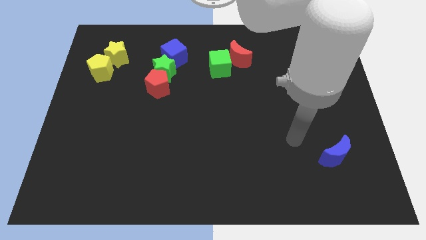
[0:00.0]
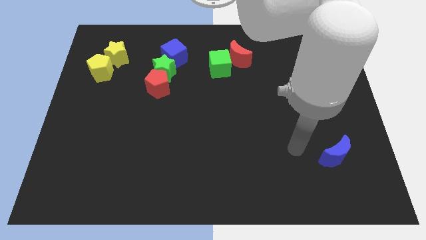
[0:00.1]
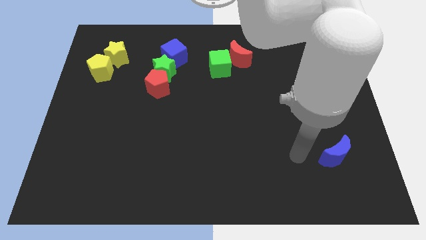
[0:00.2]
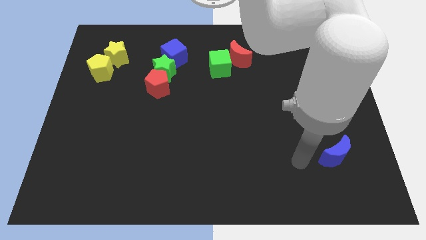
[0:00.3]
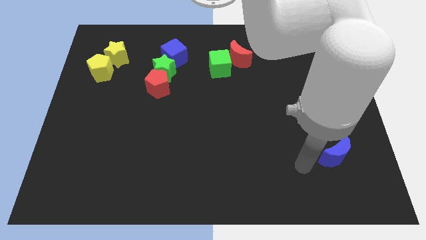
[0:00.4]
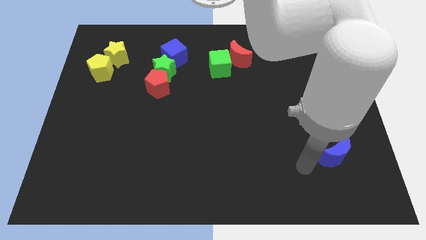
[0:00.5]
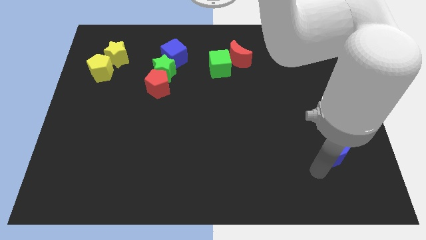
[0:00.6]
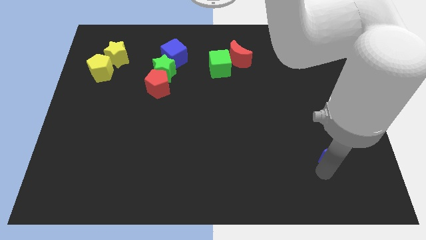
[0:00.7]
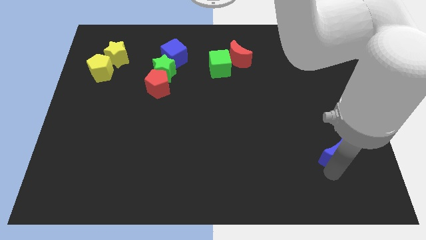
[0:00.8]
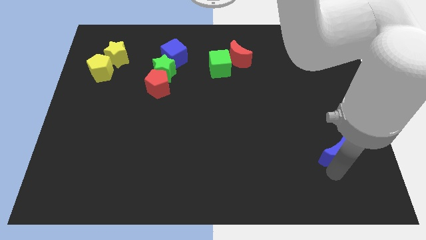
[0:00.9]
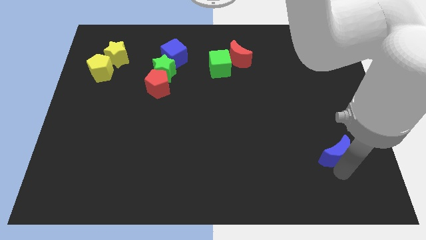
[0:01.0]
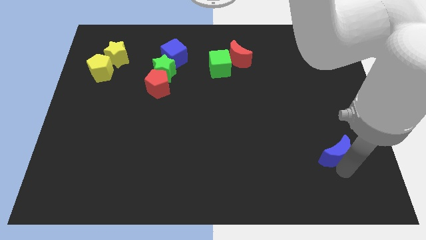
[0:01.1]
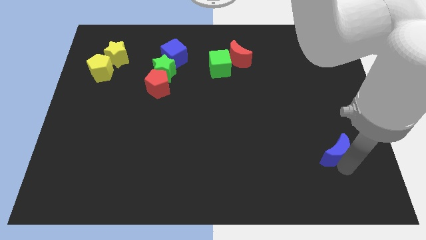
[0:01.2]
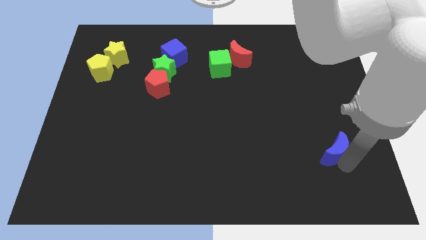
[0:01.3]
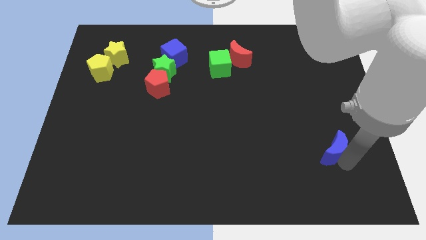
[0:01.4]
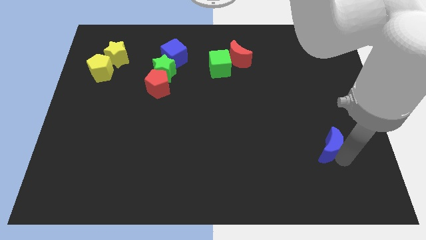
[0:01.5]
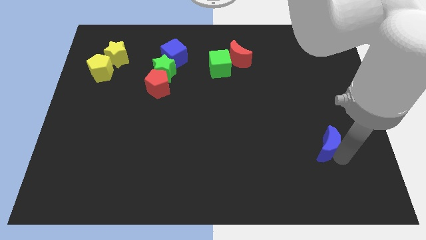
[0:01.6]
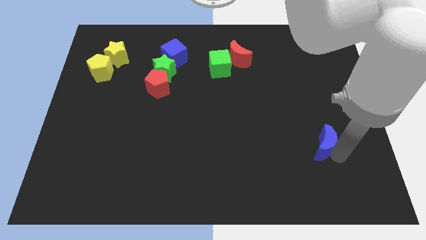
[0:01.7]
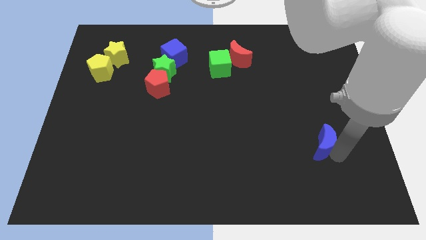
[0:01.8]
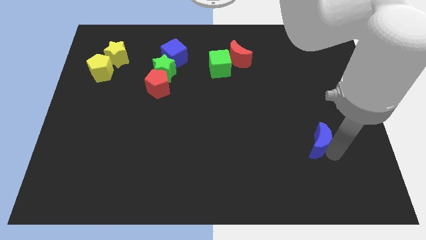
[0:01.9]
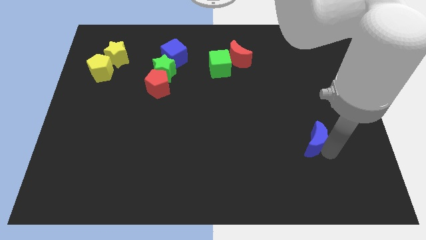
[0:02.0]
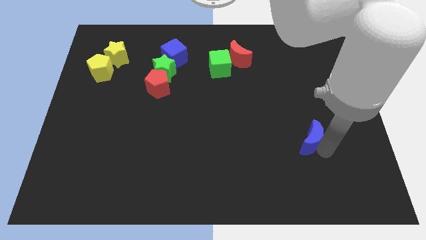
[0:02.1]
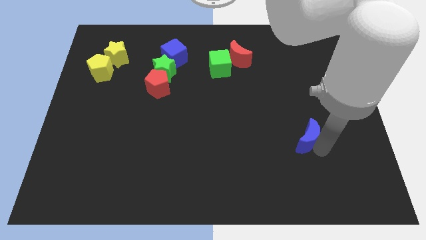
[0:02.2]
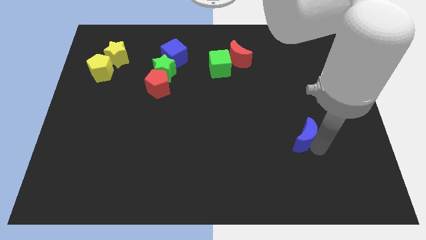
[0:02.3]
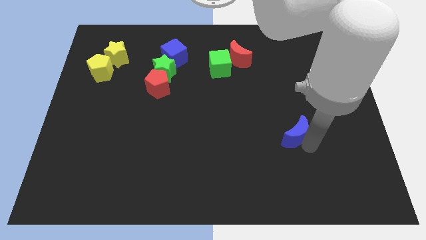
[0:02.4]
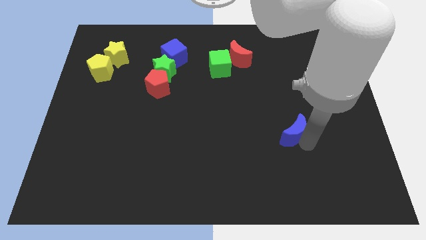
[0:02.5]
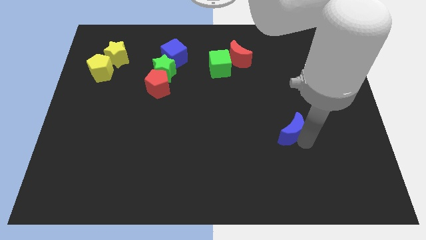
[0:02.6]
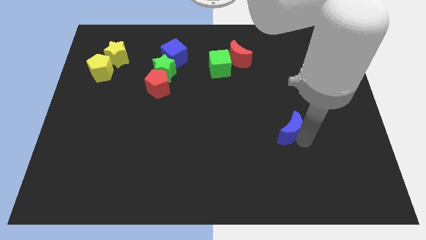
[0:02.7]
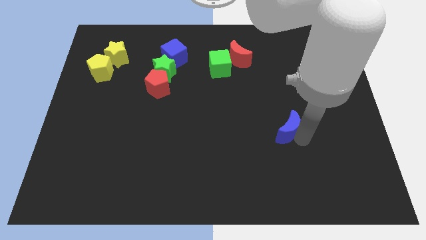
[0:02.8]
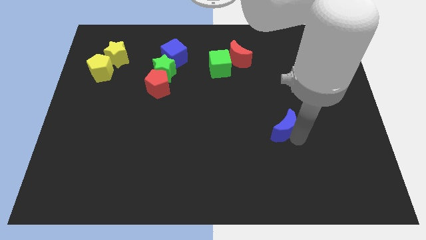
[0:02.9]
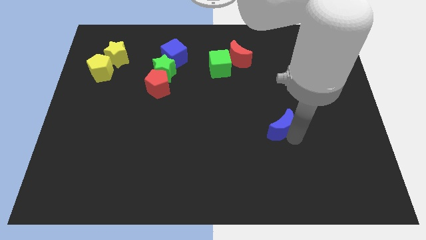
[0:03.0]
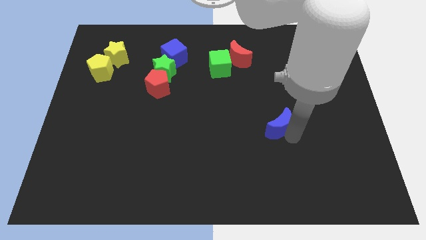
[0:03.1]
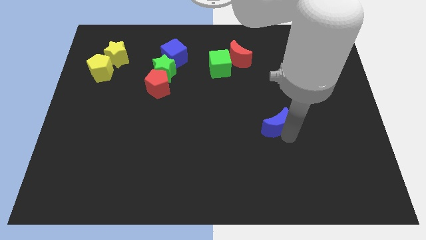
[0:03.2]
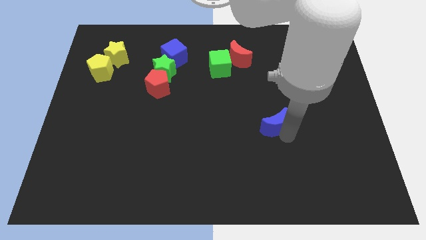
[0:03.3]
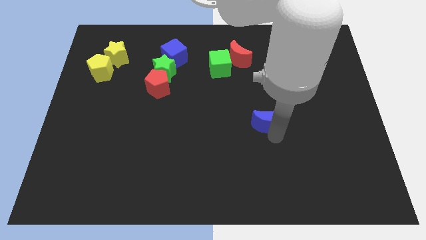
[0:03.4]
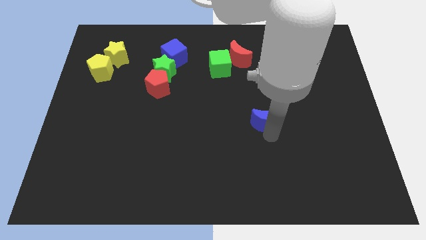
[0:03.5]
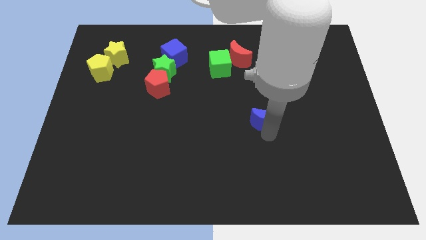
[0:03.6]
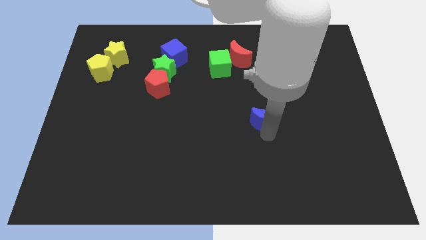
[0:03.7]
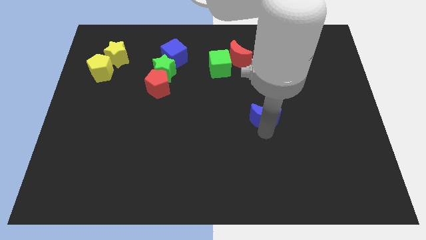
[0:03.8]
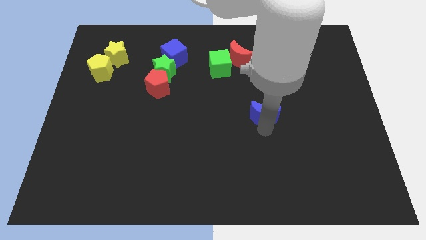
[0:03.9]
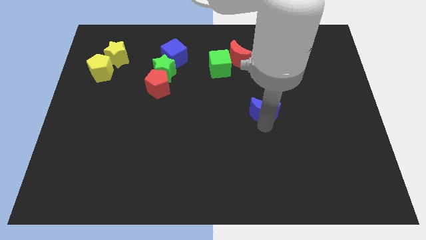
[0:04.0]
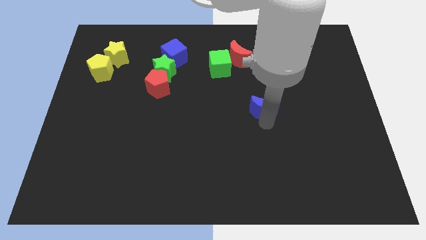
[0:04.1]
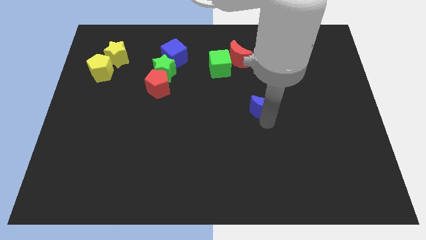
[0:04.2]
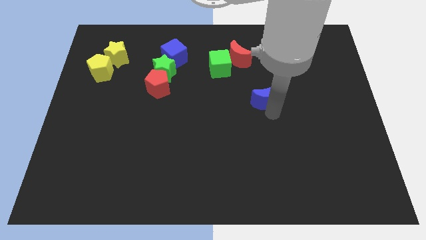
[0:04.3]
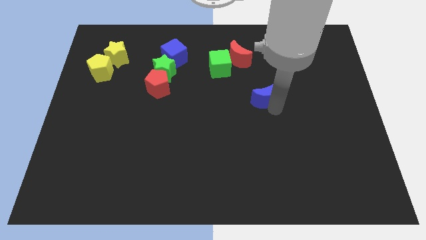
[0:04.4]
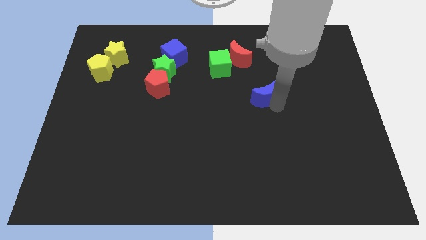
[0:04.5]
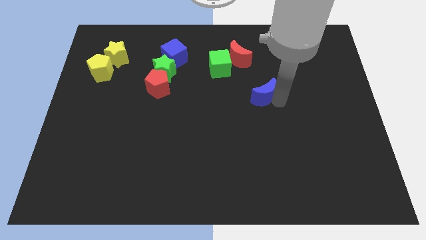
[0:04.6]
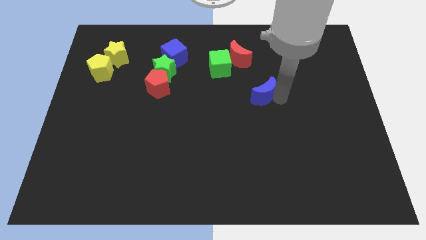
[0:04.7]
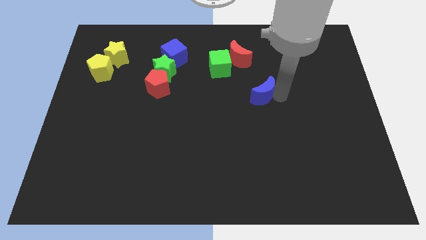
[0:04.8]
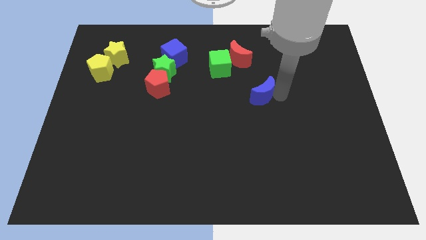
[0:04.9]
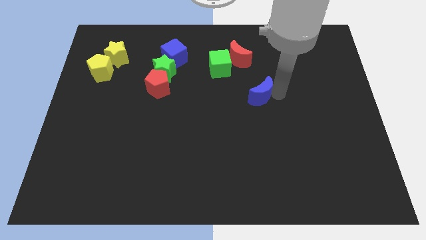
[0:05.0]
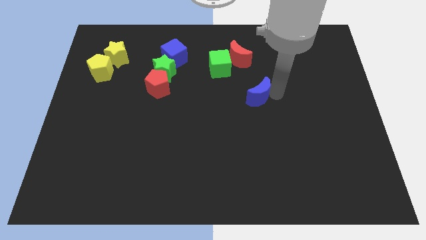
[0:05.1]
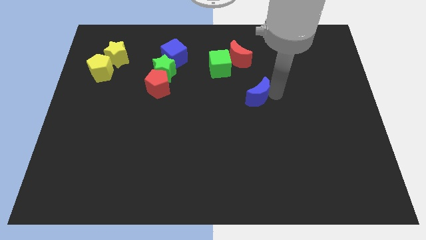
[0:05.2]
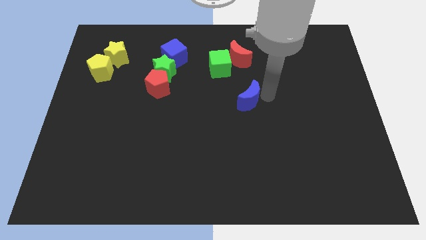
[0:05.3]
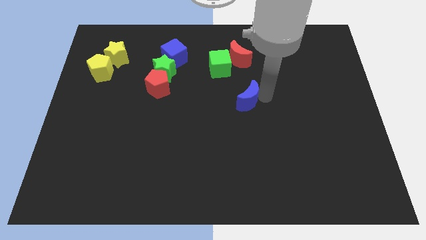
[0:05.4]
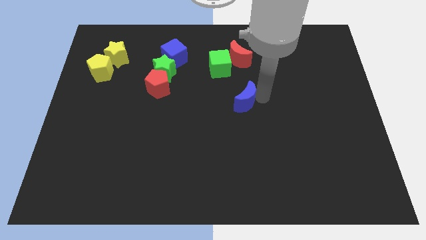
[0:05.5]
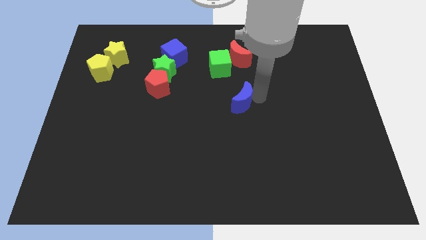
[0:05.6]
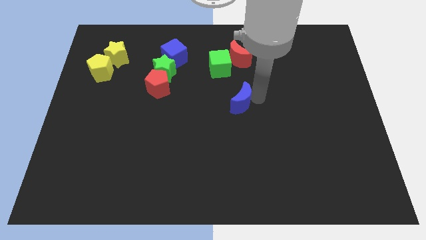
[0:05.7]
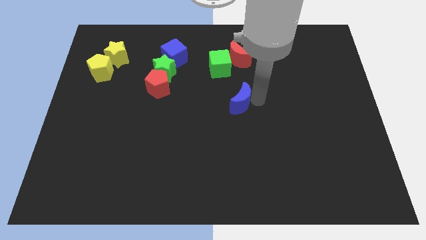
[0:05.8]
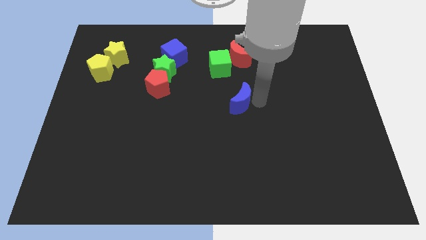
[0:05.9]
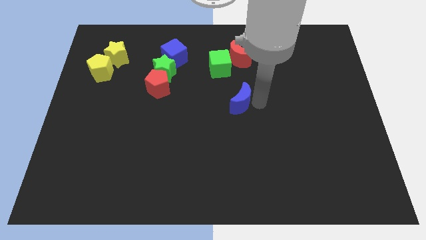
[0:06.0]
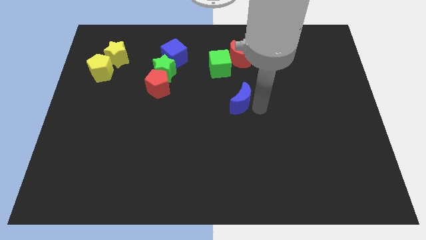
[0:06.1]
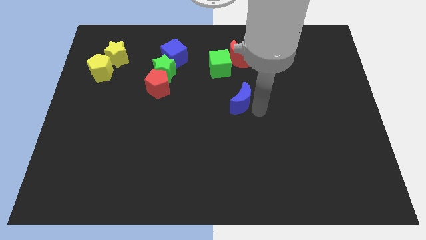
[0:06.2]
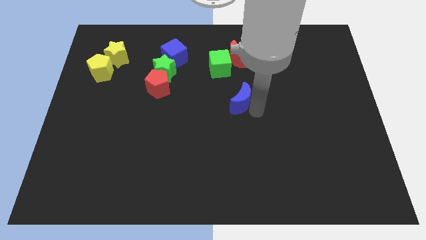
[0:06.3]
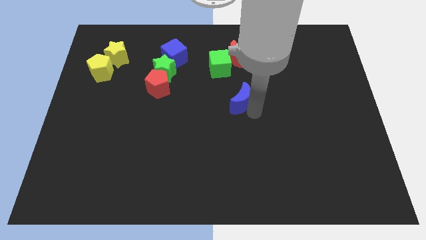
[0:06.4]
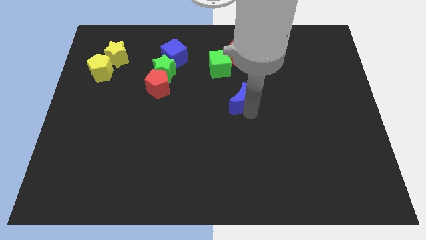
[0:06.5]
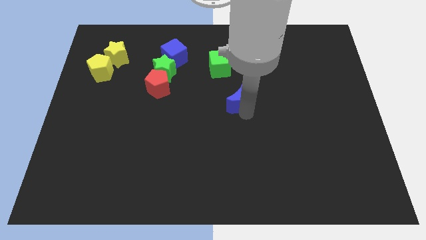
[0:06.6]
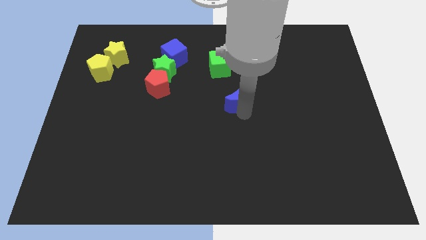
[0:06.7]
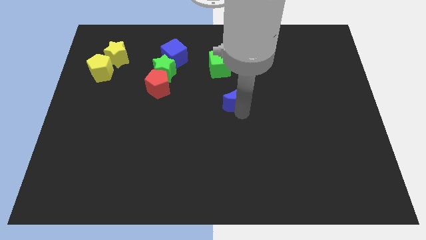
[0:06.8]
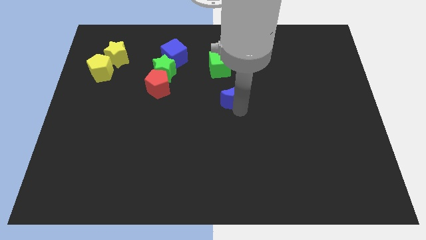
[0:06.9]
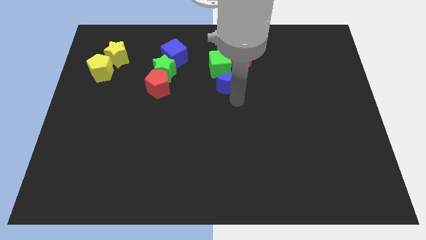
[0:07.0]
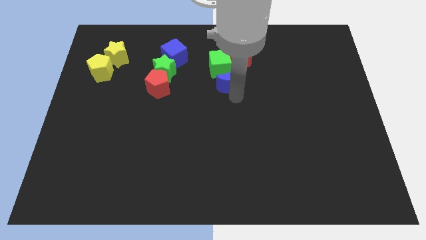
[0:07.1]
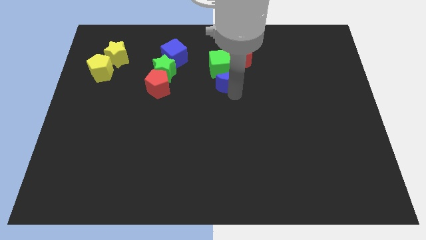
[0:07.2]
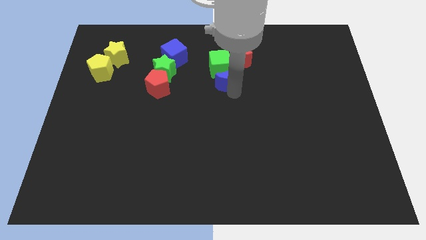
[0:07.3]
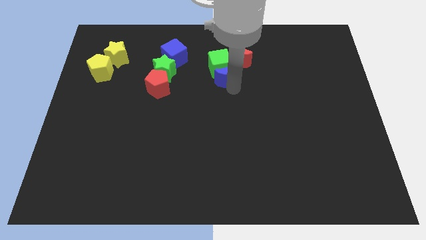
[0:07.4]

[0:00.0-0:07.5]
slide the blue moon next to the green cube

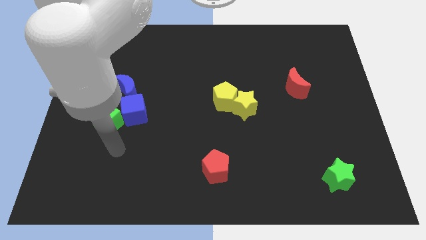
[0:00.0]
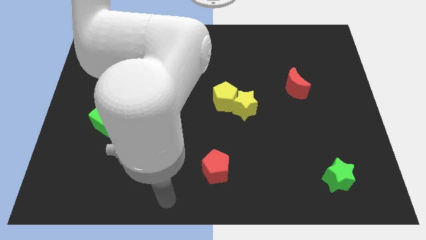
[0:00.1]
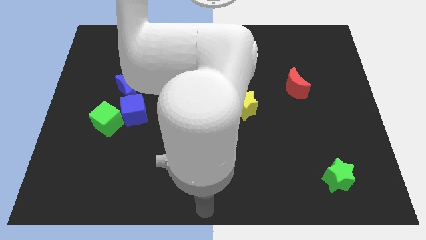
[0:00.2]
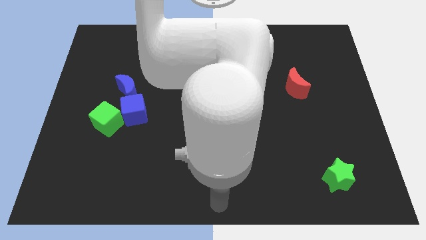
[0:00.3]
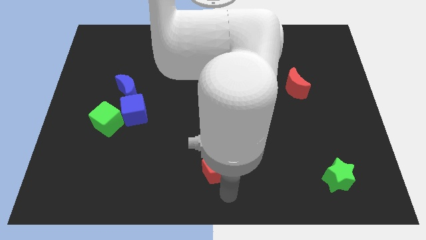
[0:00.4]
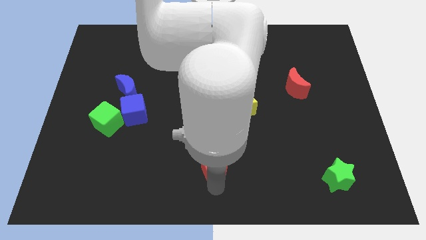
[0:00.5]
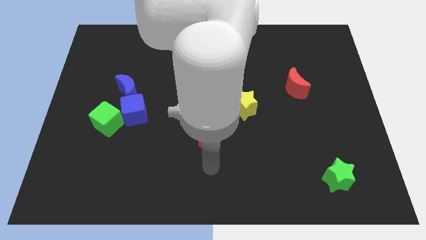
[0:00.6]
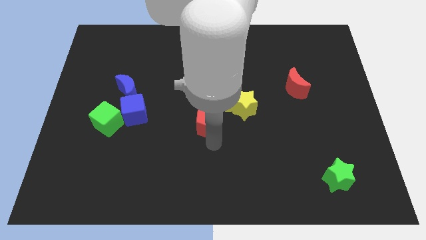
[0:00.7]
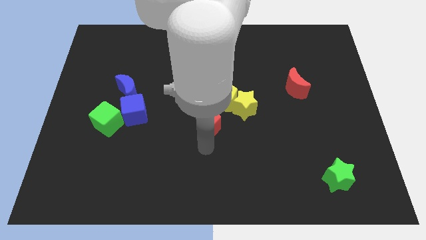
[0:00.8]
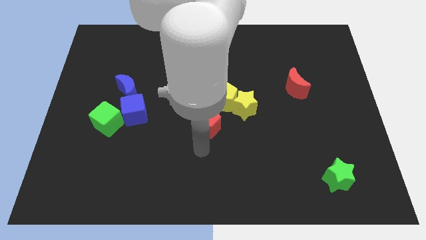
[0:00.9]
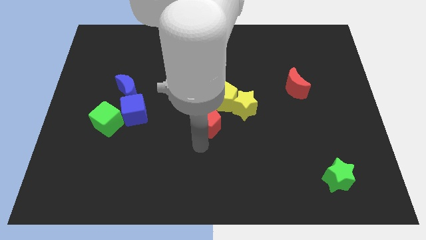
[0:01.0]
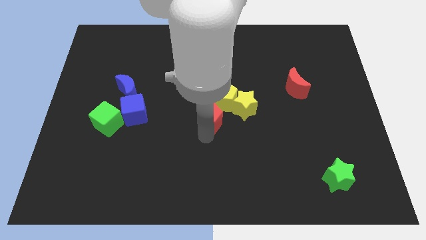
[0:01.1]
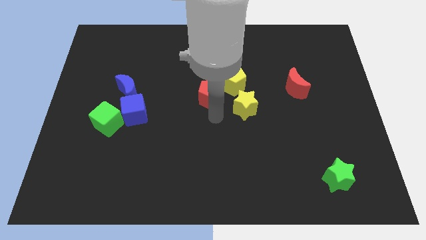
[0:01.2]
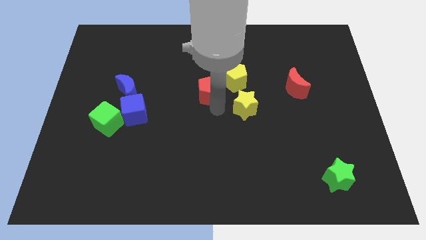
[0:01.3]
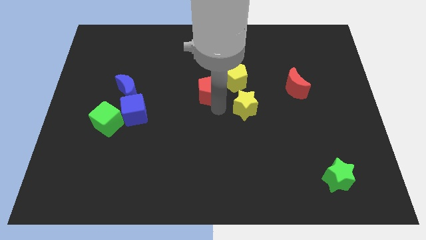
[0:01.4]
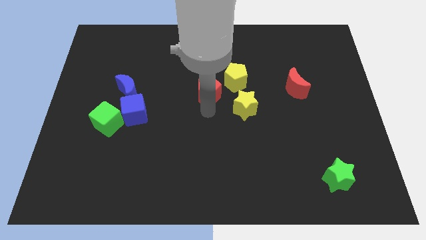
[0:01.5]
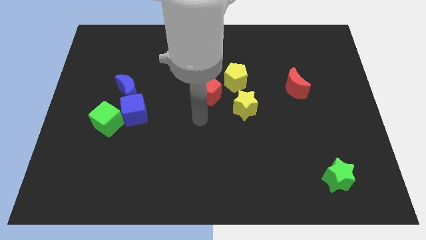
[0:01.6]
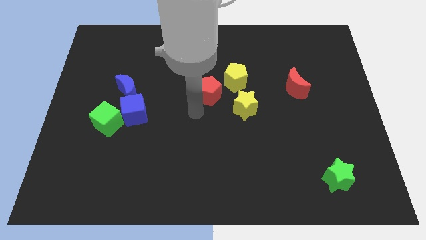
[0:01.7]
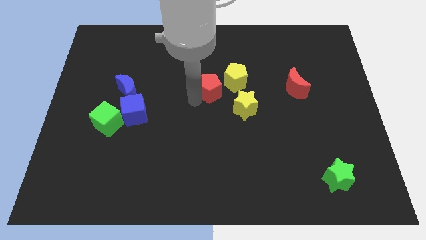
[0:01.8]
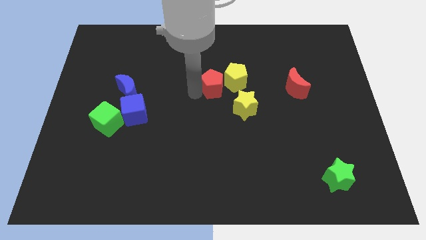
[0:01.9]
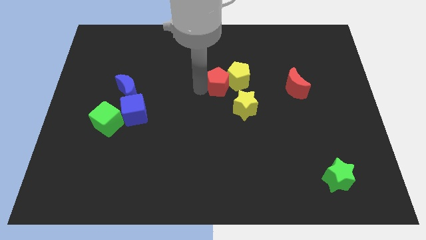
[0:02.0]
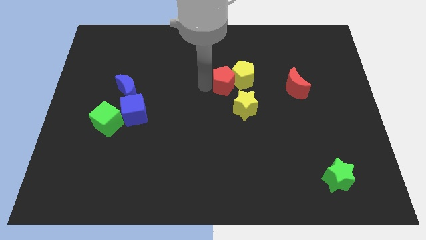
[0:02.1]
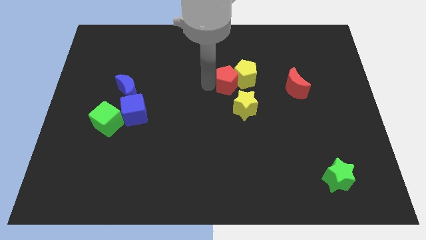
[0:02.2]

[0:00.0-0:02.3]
push the red pentagon towards the yellow pentagon
